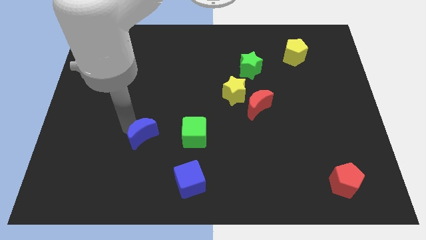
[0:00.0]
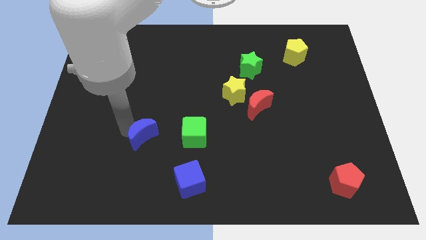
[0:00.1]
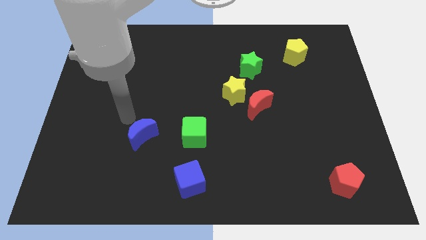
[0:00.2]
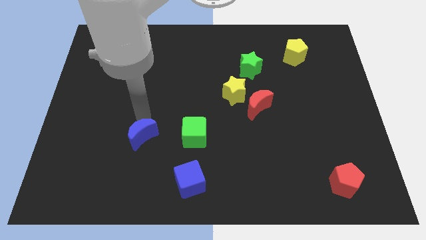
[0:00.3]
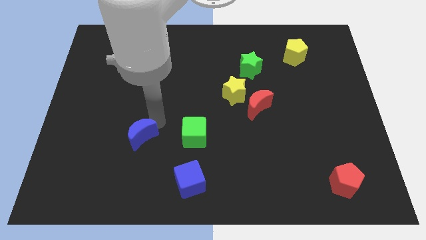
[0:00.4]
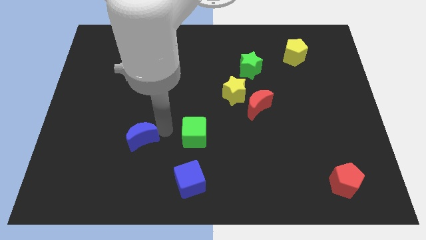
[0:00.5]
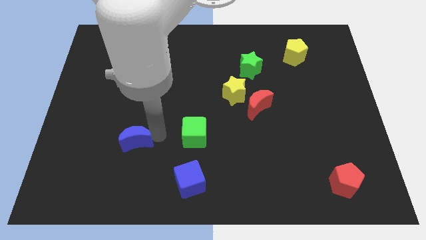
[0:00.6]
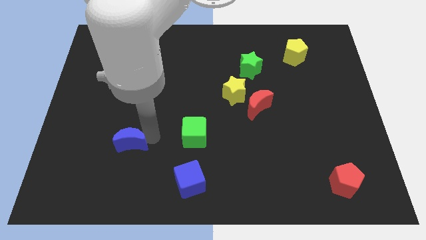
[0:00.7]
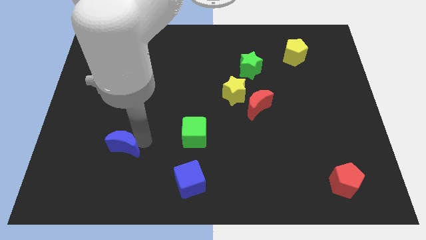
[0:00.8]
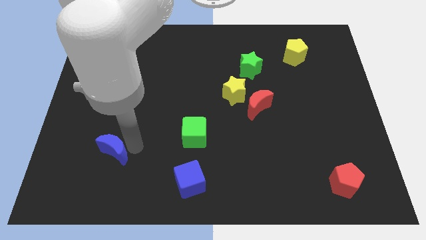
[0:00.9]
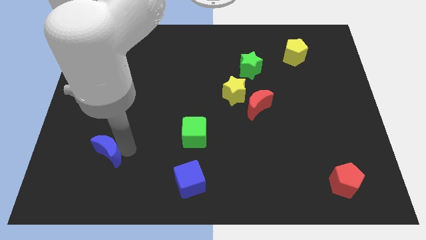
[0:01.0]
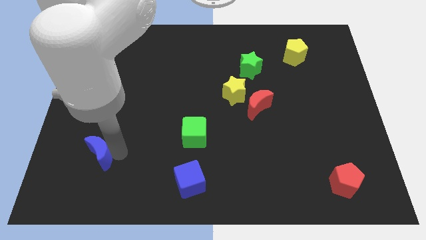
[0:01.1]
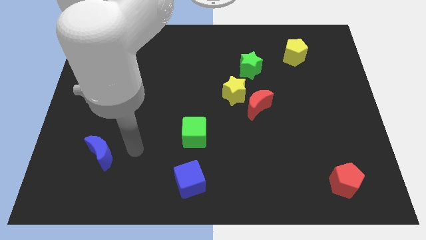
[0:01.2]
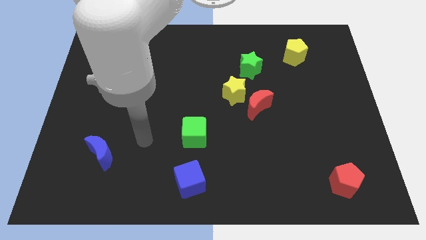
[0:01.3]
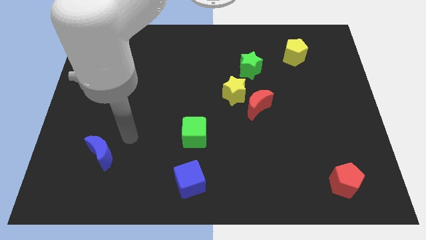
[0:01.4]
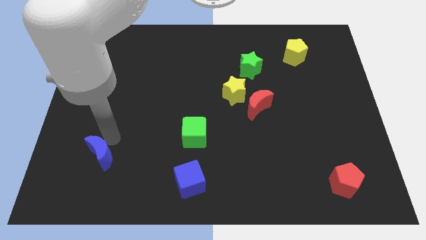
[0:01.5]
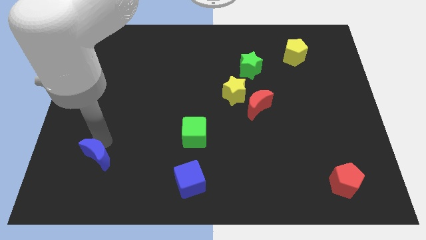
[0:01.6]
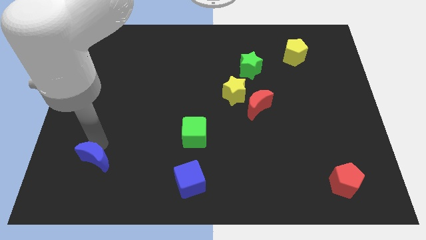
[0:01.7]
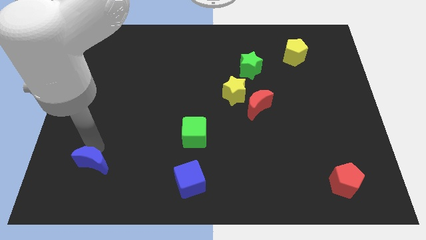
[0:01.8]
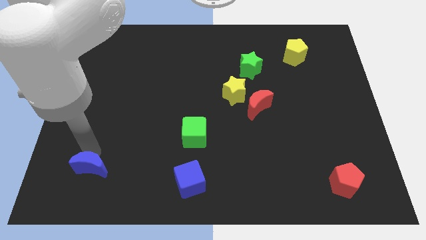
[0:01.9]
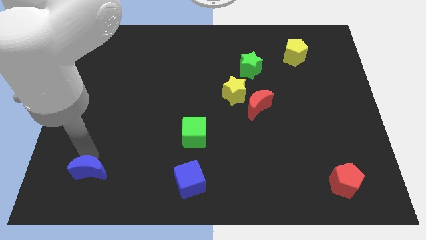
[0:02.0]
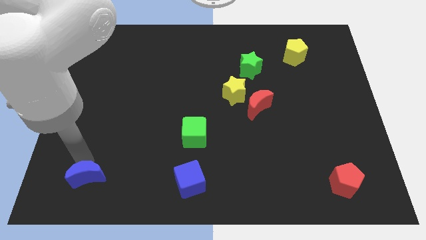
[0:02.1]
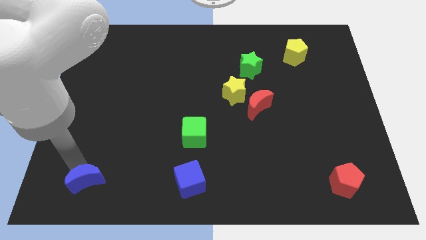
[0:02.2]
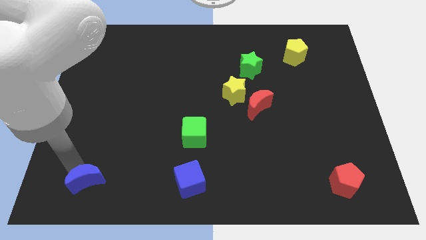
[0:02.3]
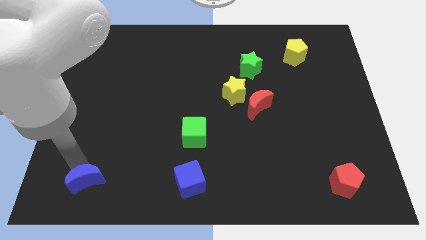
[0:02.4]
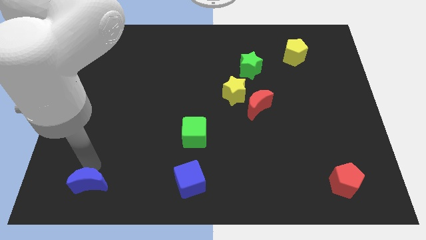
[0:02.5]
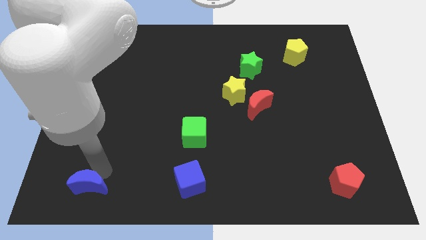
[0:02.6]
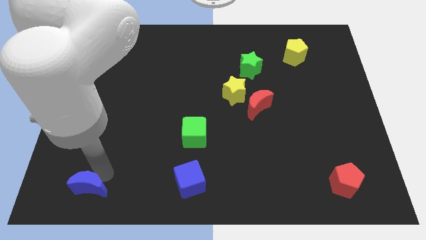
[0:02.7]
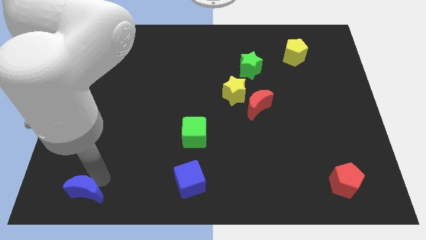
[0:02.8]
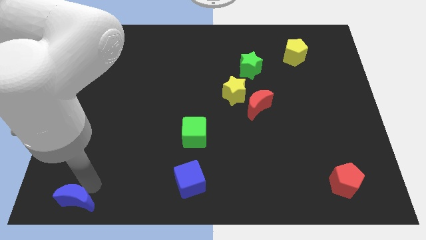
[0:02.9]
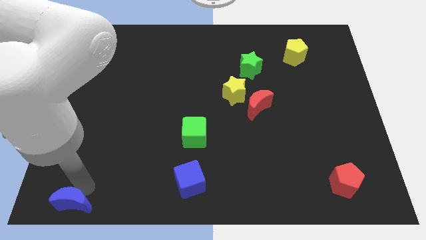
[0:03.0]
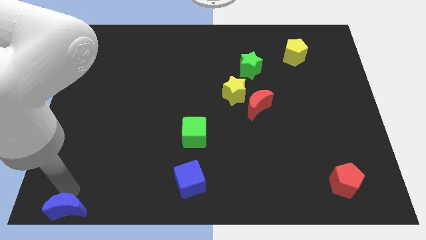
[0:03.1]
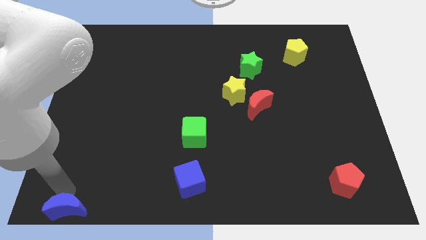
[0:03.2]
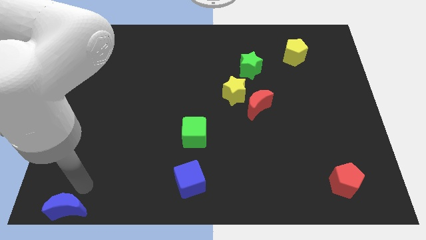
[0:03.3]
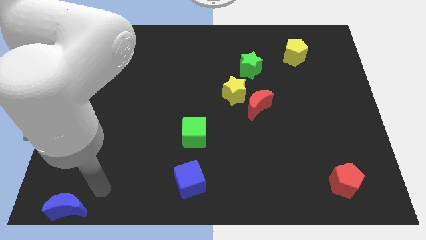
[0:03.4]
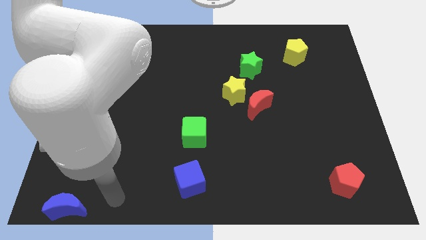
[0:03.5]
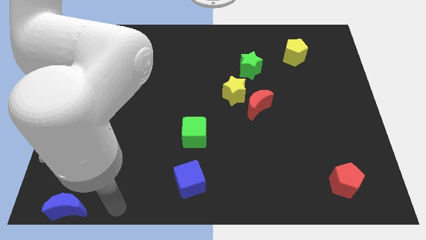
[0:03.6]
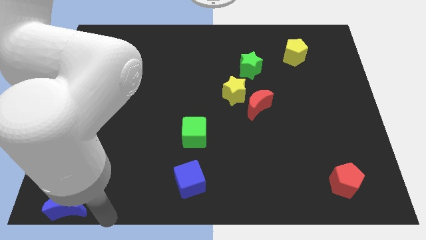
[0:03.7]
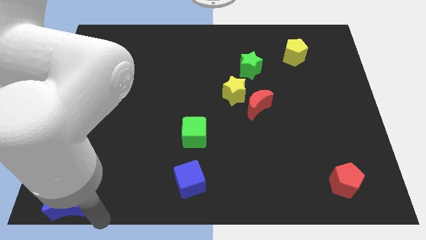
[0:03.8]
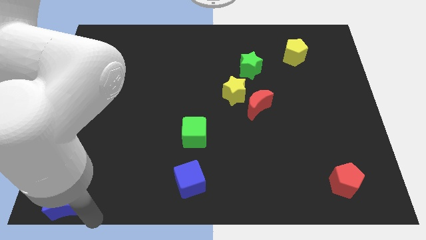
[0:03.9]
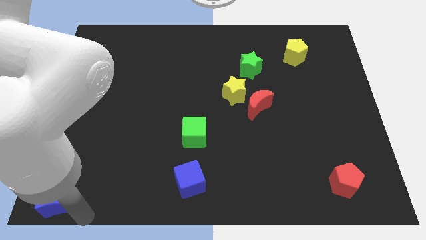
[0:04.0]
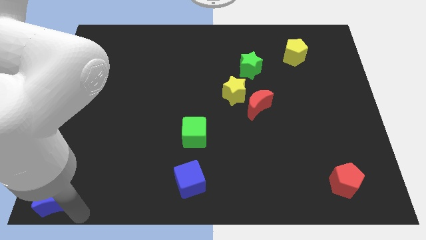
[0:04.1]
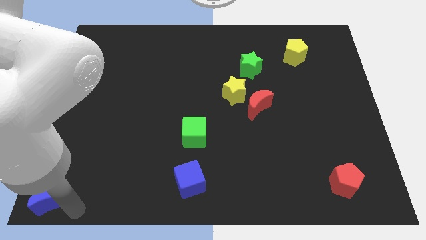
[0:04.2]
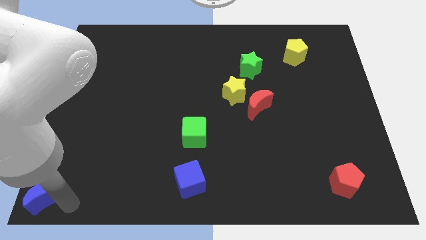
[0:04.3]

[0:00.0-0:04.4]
move the blue crescent to the bottom left side of the board

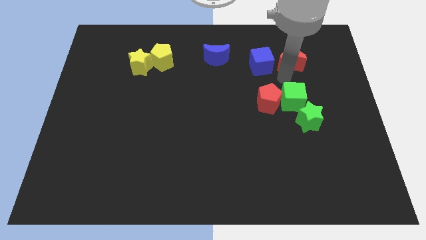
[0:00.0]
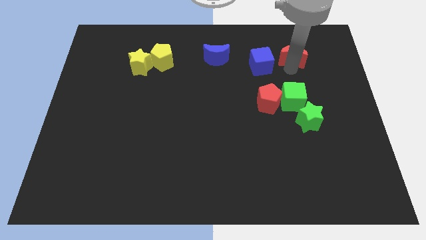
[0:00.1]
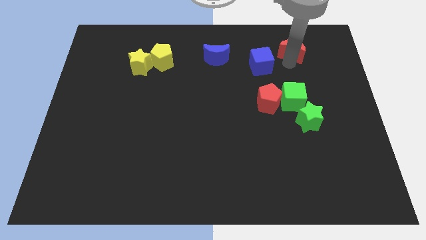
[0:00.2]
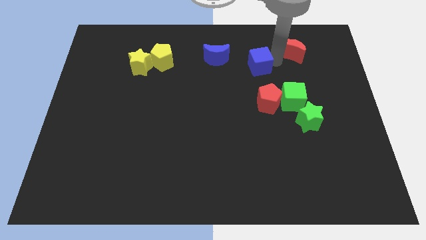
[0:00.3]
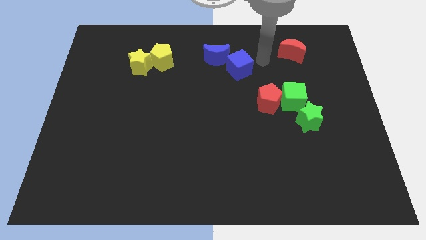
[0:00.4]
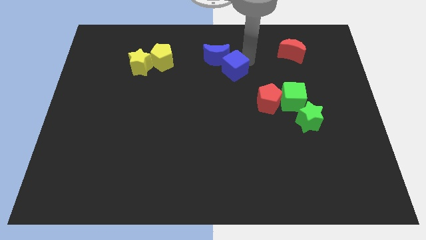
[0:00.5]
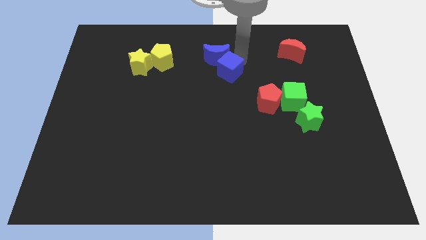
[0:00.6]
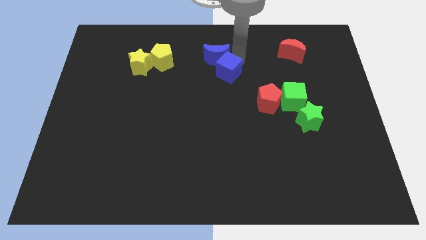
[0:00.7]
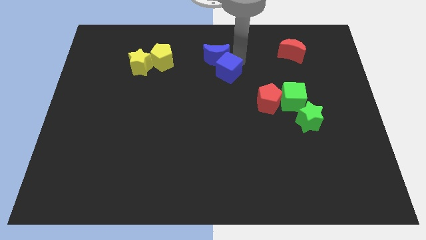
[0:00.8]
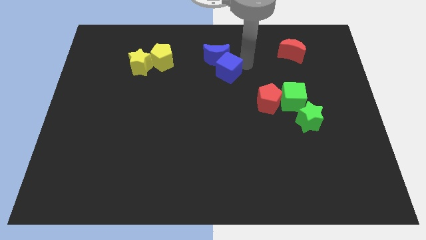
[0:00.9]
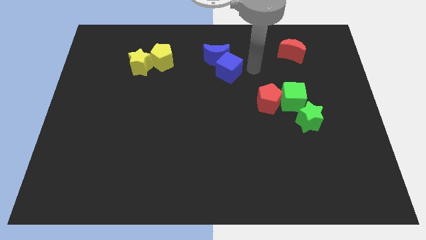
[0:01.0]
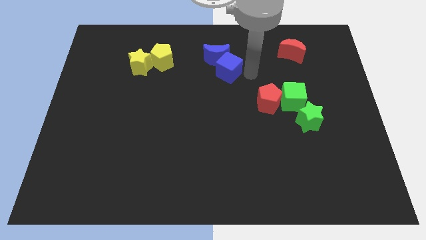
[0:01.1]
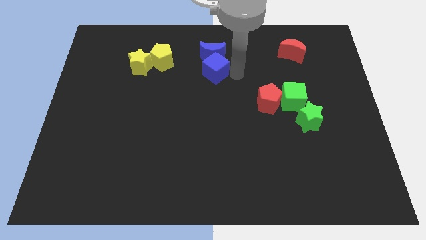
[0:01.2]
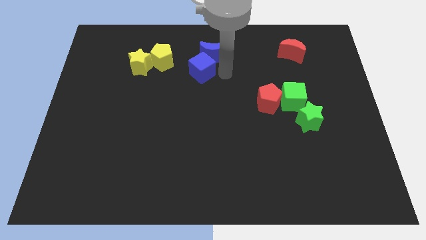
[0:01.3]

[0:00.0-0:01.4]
move the blue cube below the blue crescent

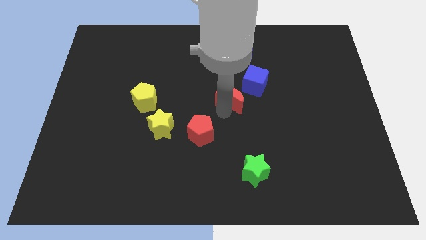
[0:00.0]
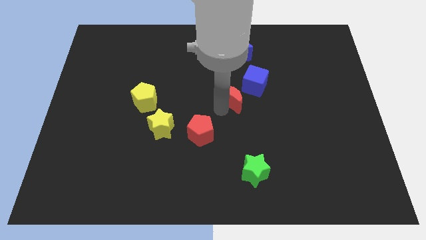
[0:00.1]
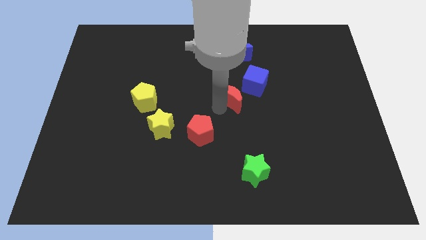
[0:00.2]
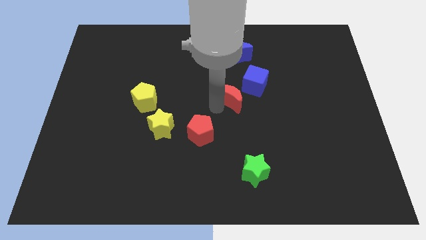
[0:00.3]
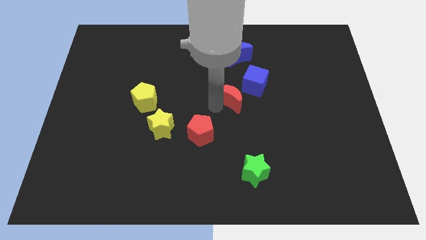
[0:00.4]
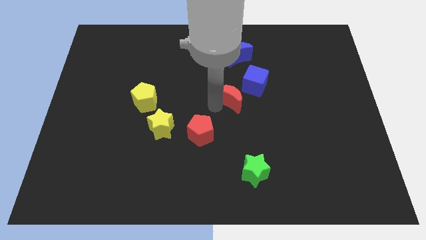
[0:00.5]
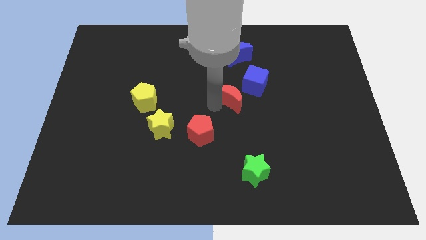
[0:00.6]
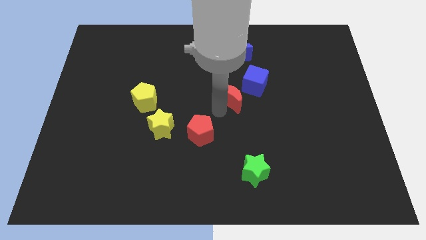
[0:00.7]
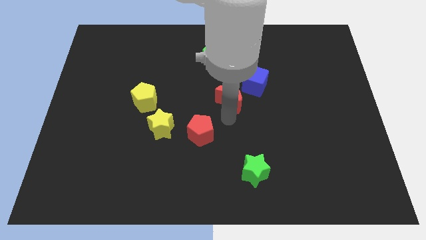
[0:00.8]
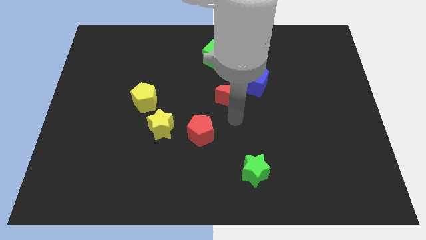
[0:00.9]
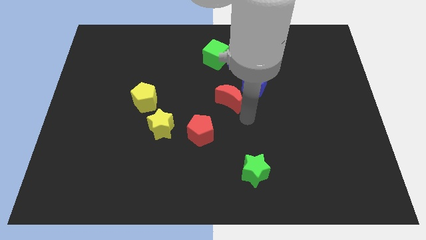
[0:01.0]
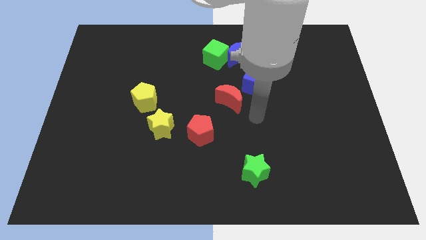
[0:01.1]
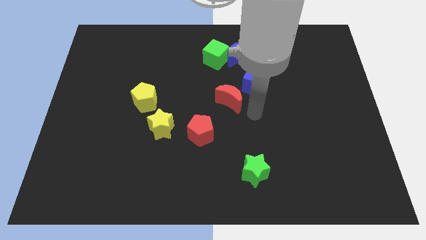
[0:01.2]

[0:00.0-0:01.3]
place your arm at the right of the red moon

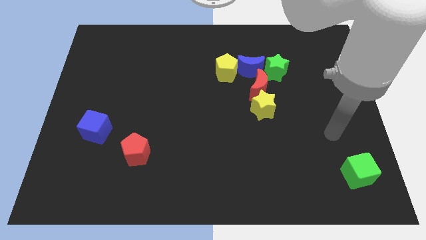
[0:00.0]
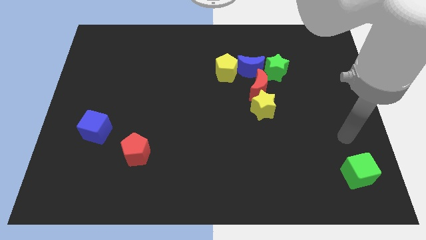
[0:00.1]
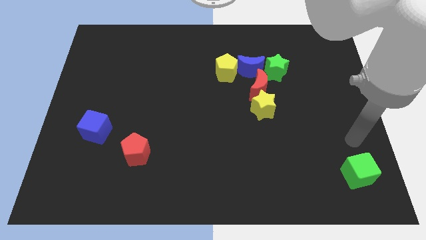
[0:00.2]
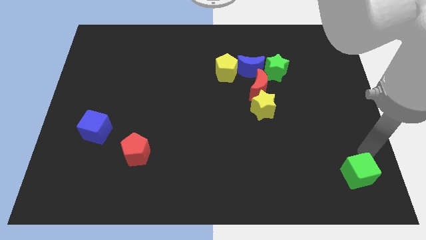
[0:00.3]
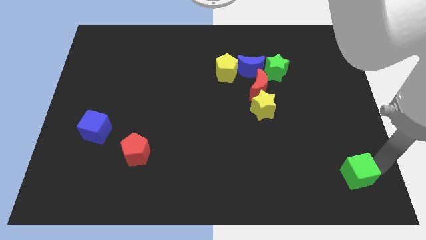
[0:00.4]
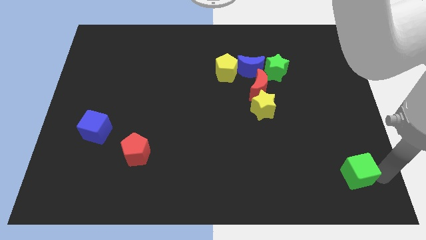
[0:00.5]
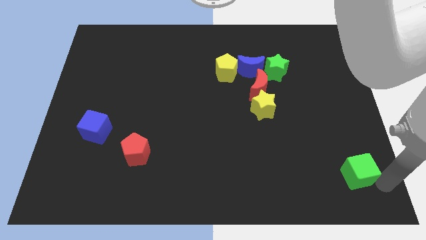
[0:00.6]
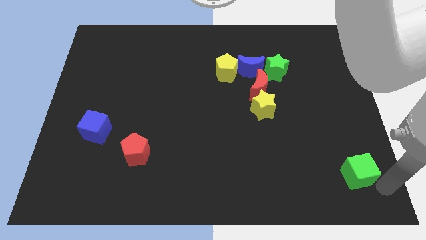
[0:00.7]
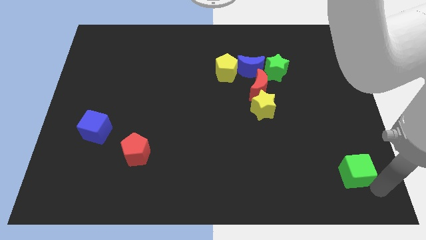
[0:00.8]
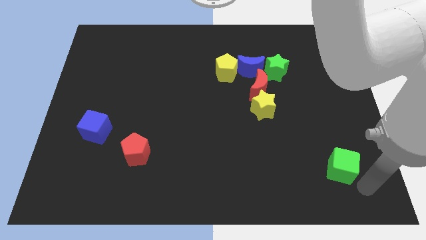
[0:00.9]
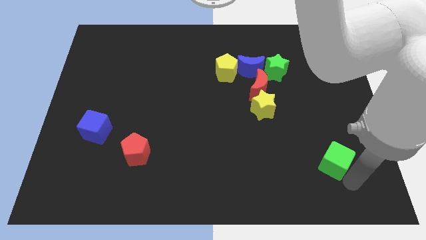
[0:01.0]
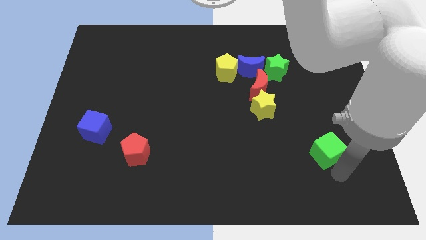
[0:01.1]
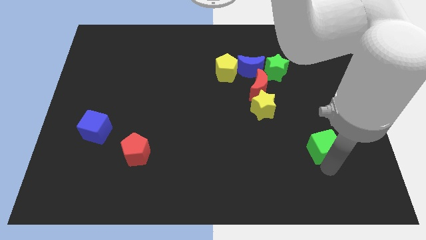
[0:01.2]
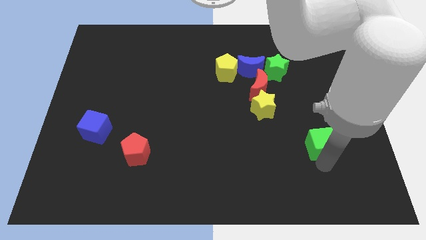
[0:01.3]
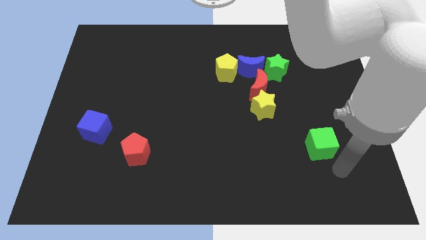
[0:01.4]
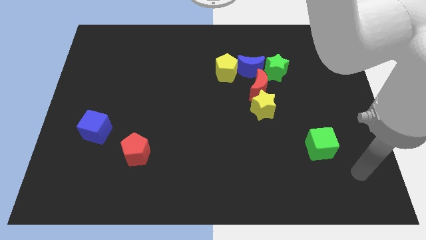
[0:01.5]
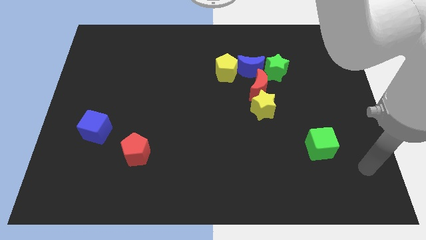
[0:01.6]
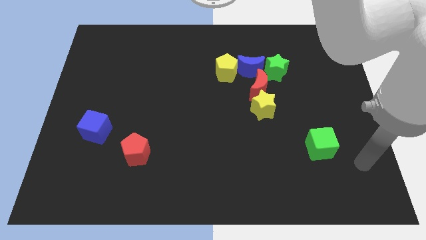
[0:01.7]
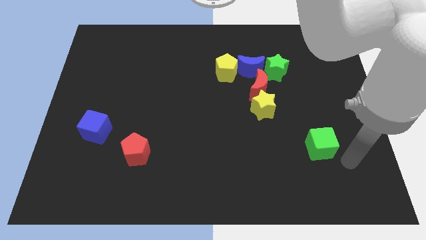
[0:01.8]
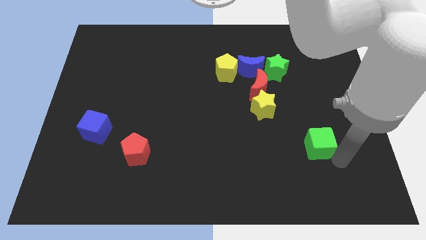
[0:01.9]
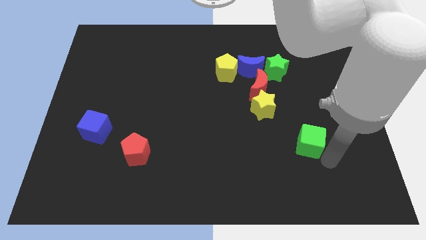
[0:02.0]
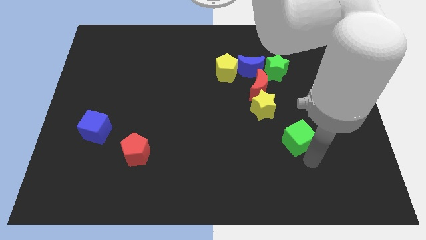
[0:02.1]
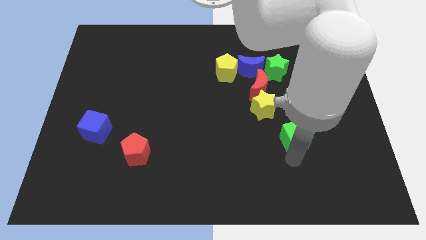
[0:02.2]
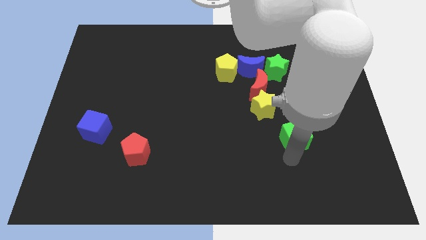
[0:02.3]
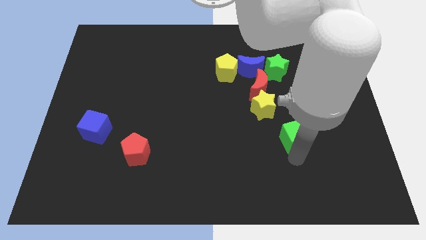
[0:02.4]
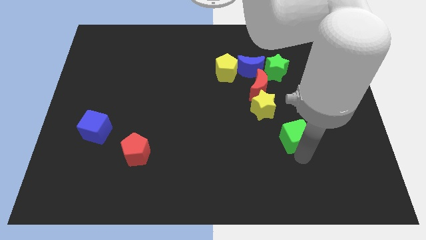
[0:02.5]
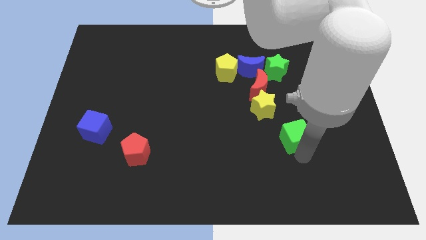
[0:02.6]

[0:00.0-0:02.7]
move the green cube to the center of the board
